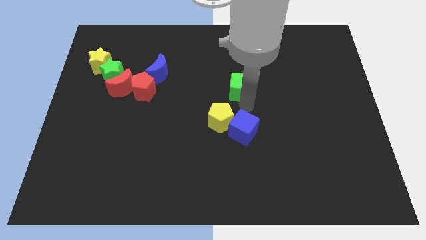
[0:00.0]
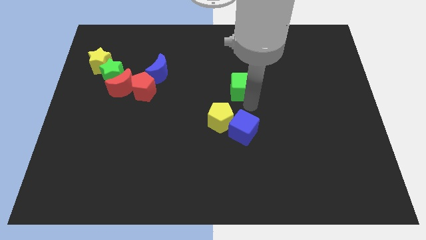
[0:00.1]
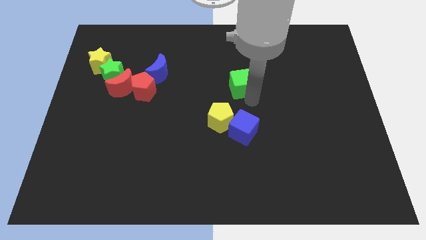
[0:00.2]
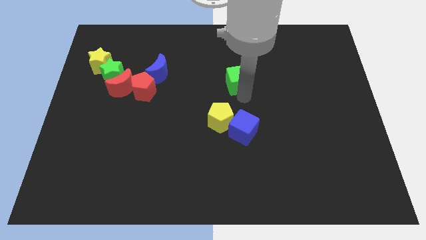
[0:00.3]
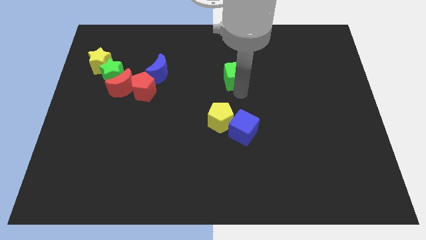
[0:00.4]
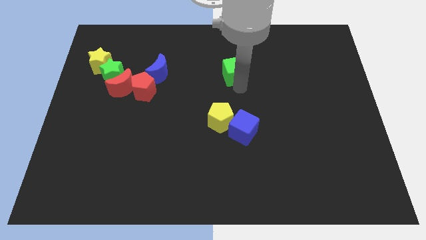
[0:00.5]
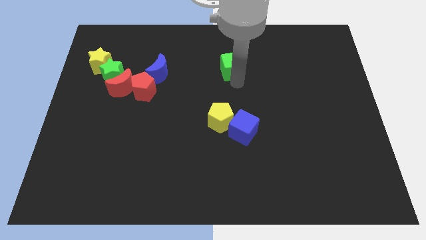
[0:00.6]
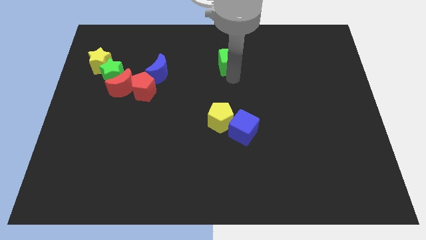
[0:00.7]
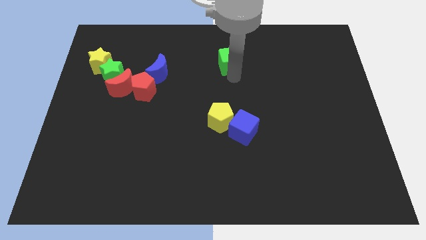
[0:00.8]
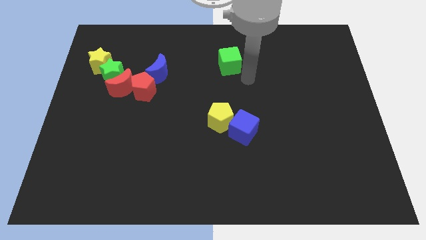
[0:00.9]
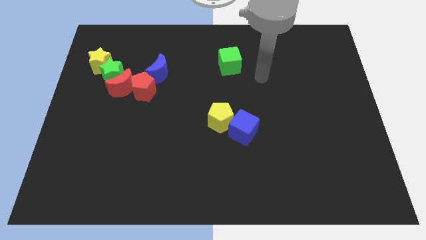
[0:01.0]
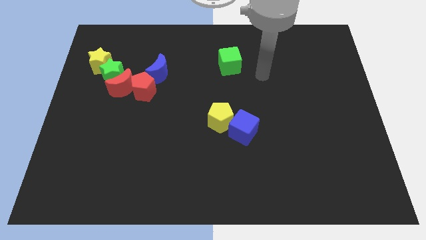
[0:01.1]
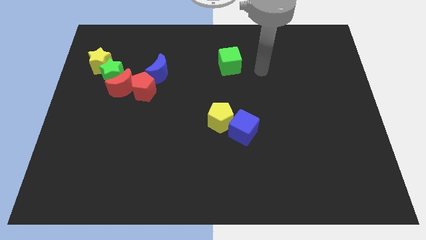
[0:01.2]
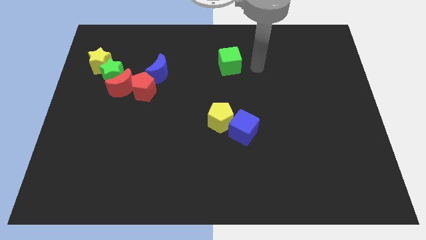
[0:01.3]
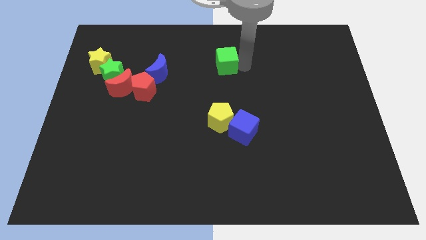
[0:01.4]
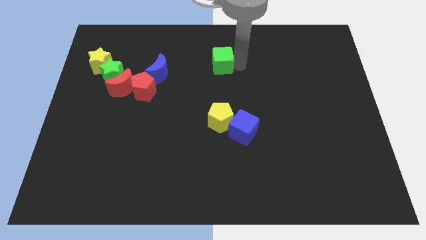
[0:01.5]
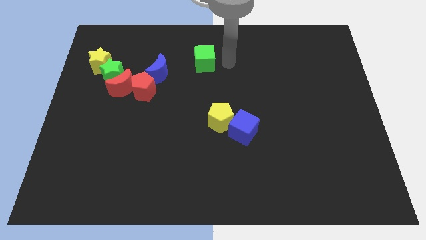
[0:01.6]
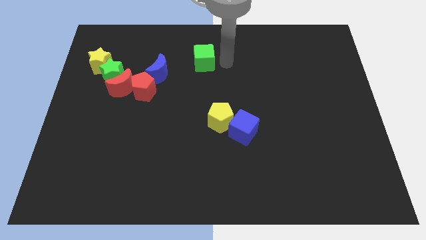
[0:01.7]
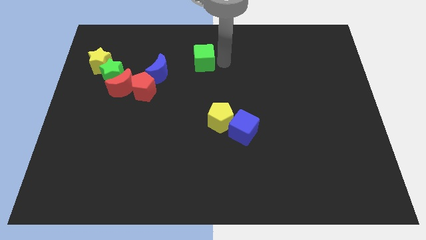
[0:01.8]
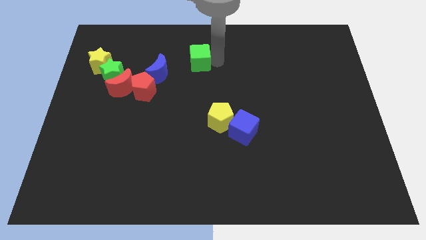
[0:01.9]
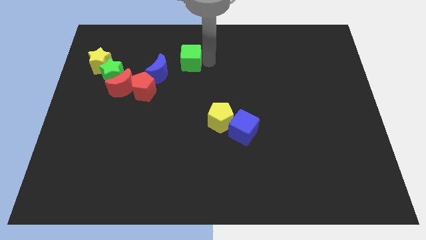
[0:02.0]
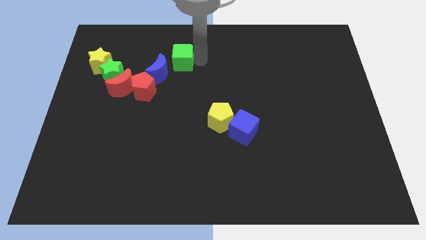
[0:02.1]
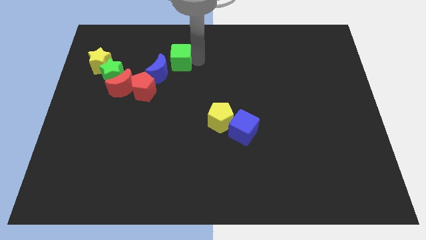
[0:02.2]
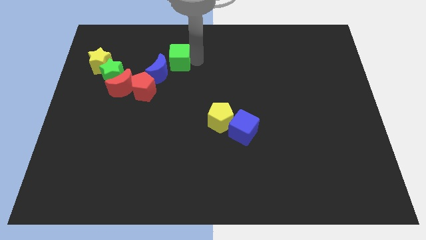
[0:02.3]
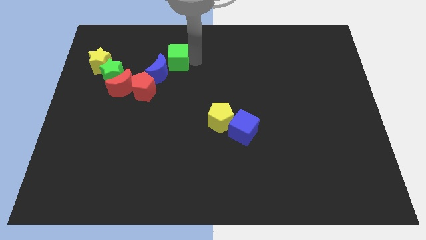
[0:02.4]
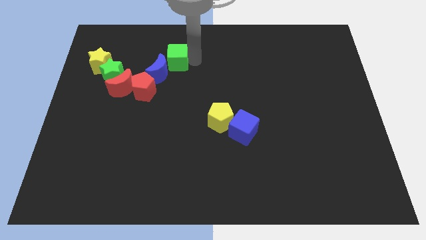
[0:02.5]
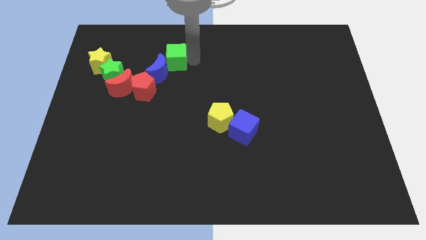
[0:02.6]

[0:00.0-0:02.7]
move green cube into group of blocks

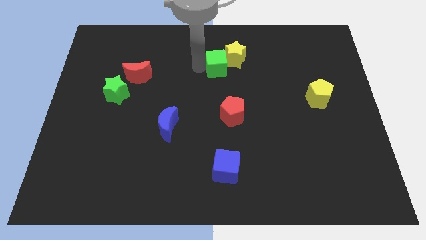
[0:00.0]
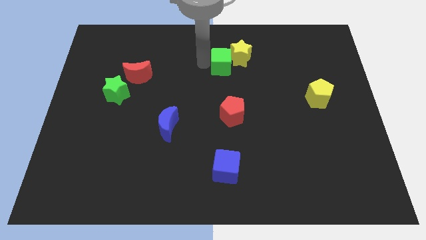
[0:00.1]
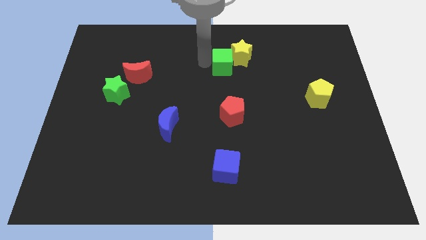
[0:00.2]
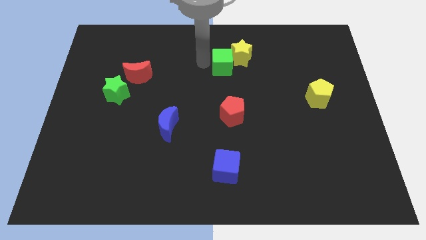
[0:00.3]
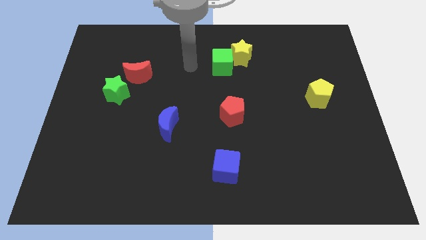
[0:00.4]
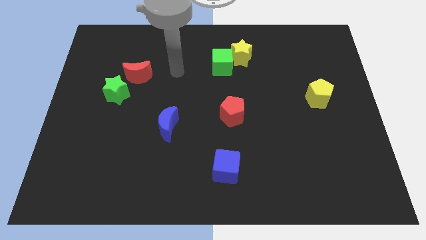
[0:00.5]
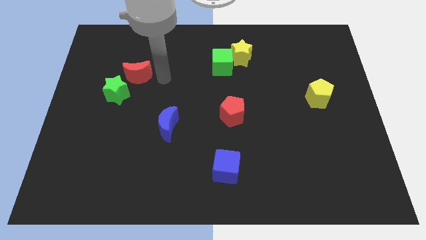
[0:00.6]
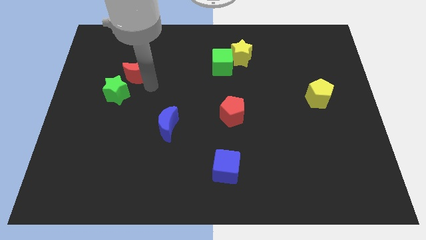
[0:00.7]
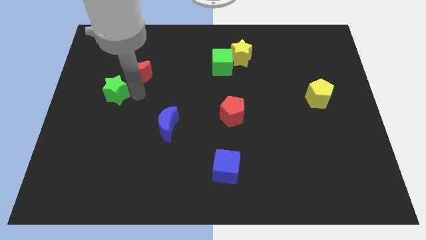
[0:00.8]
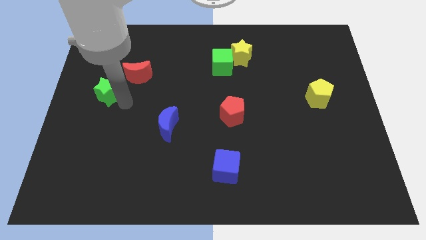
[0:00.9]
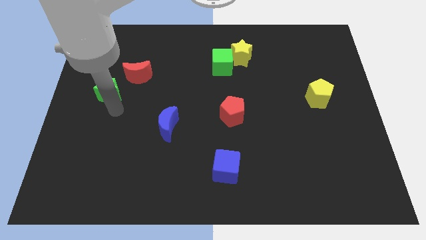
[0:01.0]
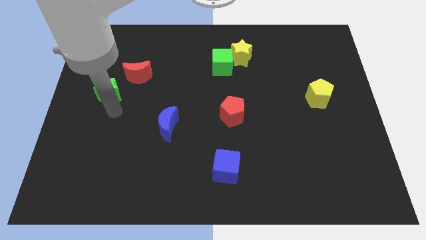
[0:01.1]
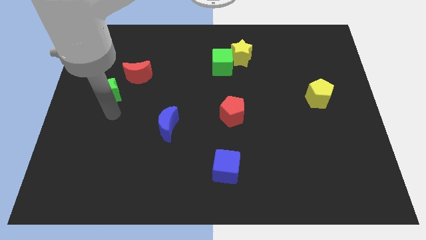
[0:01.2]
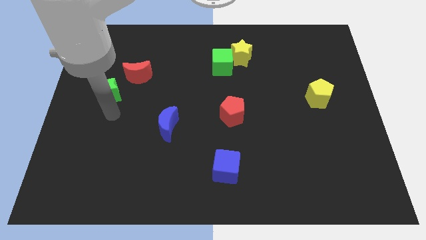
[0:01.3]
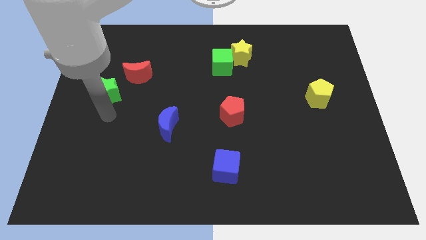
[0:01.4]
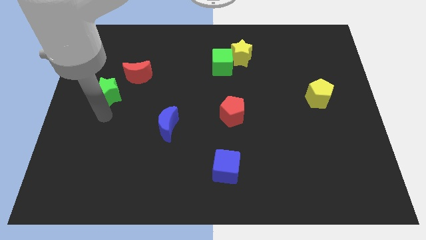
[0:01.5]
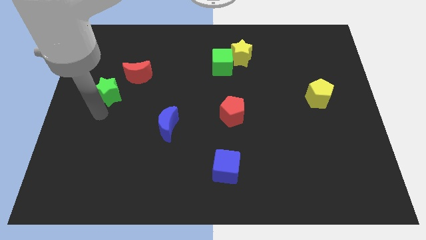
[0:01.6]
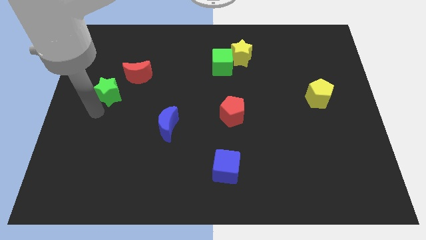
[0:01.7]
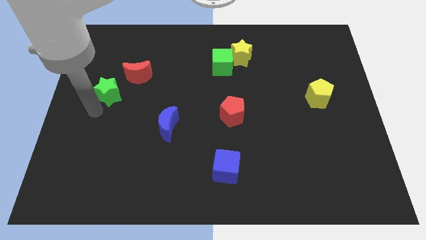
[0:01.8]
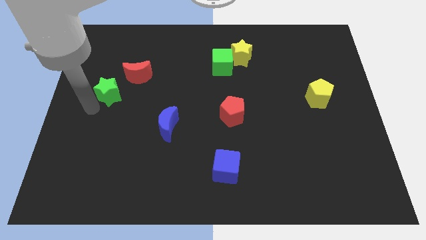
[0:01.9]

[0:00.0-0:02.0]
place the arm below the green star

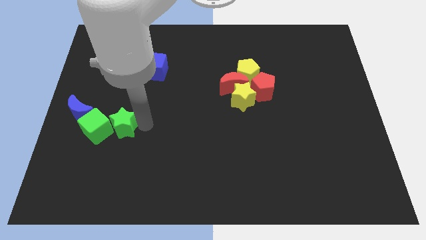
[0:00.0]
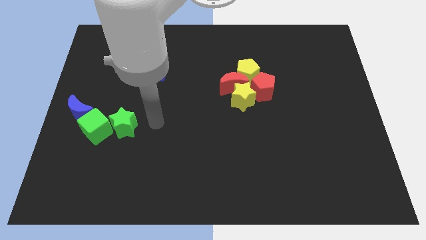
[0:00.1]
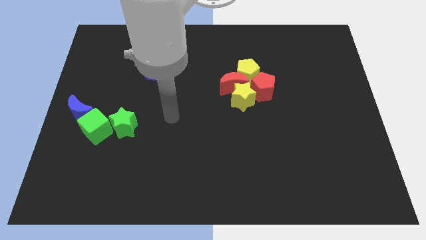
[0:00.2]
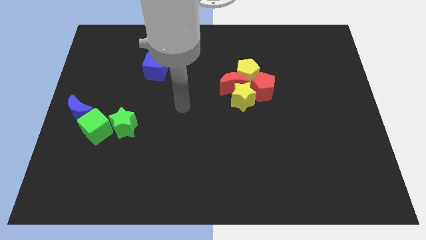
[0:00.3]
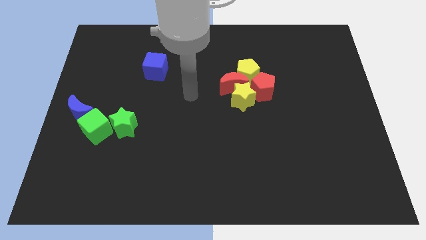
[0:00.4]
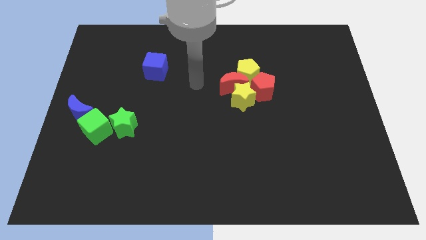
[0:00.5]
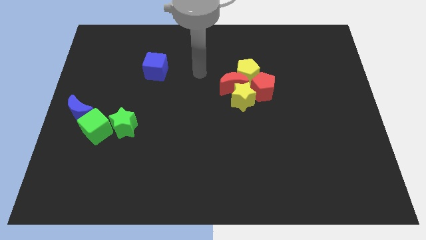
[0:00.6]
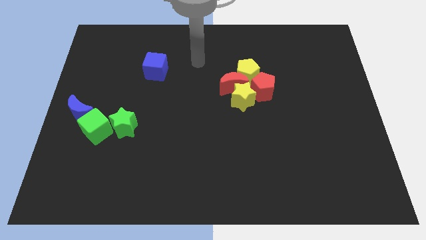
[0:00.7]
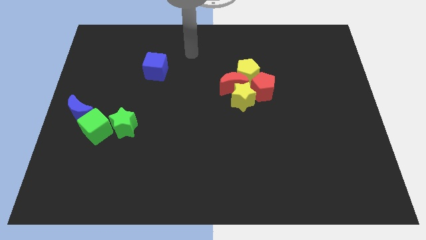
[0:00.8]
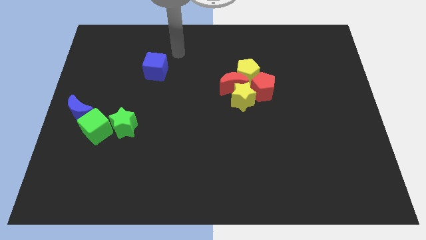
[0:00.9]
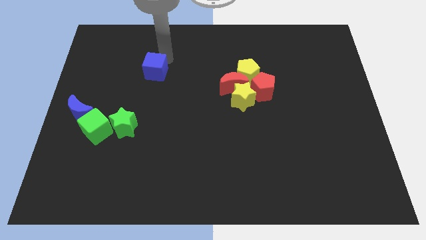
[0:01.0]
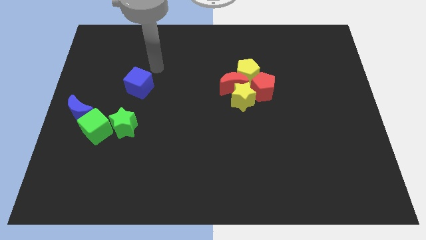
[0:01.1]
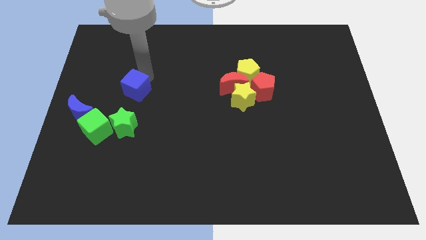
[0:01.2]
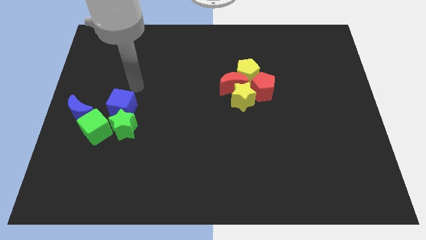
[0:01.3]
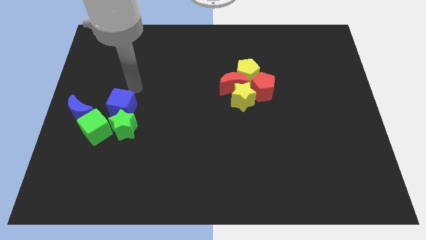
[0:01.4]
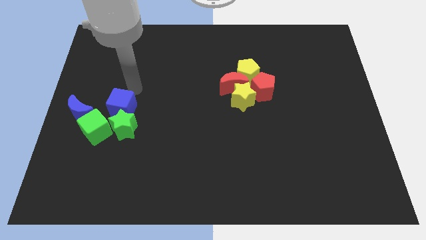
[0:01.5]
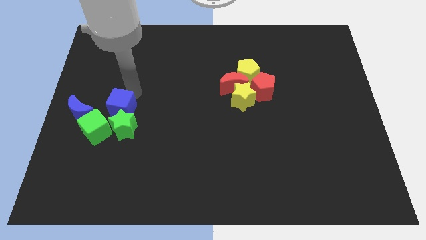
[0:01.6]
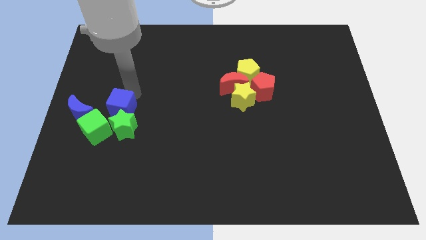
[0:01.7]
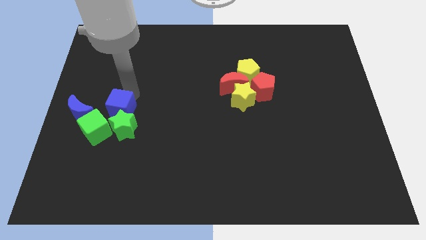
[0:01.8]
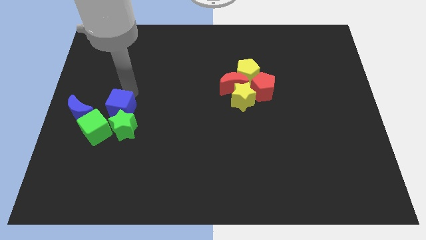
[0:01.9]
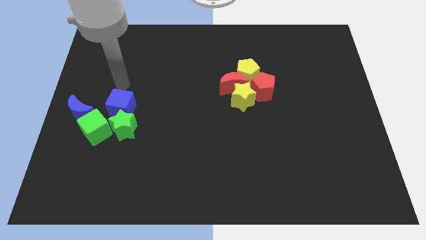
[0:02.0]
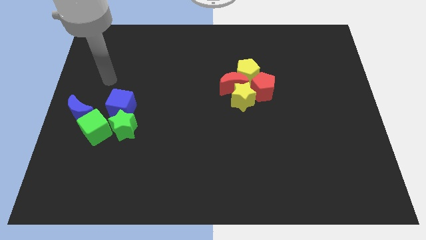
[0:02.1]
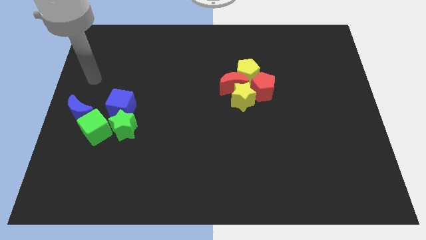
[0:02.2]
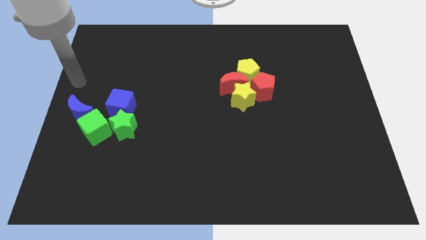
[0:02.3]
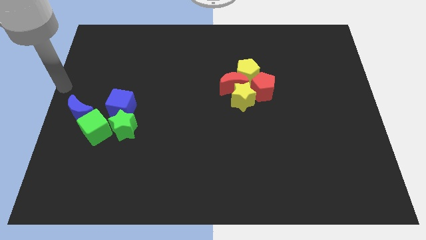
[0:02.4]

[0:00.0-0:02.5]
push the blue cube to the top of the green star

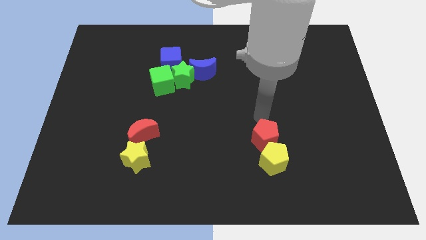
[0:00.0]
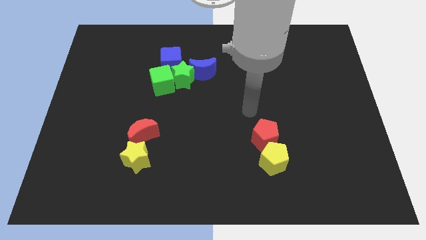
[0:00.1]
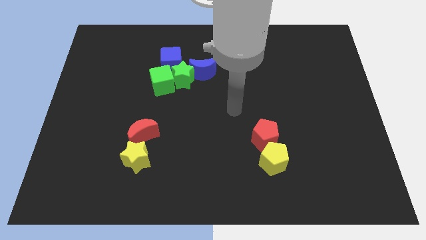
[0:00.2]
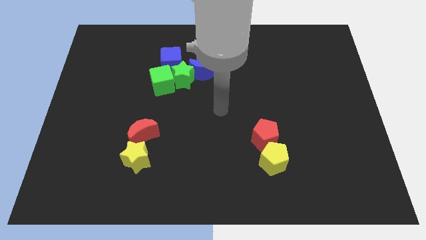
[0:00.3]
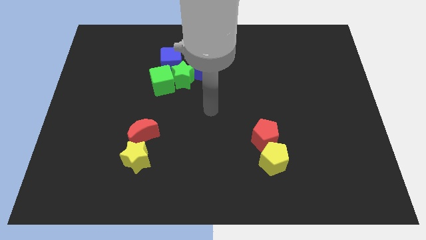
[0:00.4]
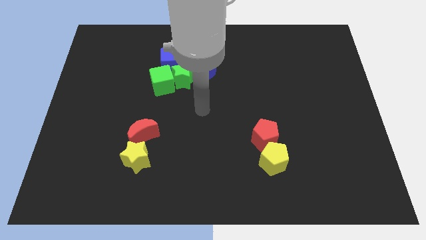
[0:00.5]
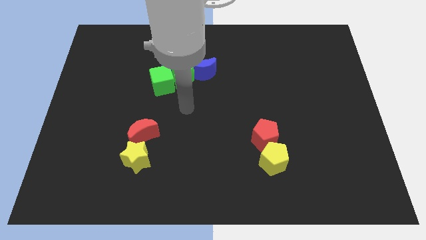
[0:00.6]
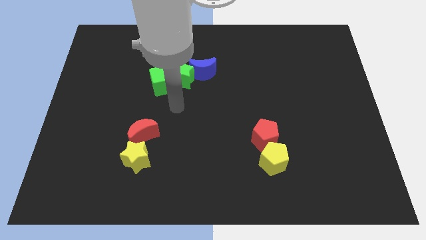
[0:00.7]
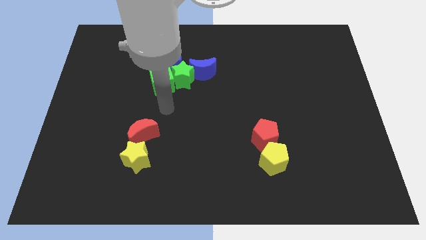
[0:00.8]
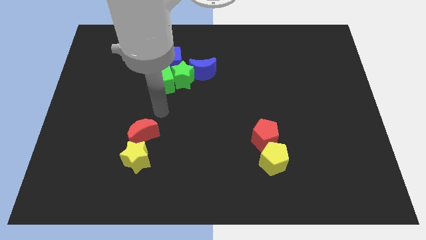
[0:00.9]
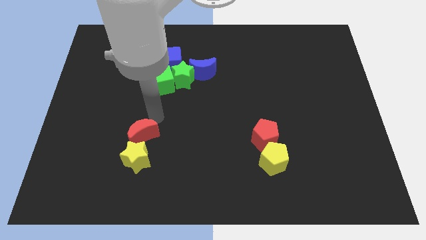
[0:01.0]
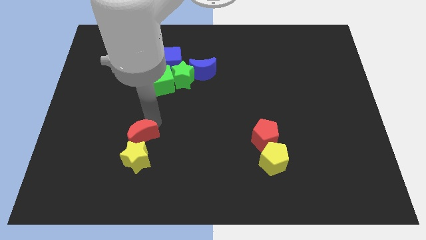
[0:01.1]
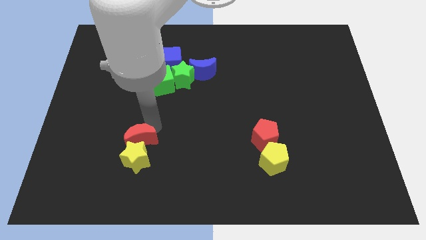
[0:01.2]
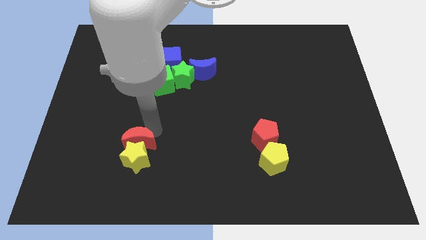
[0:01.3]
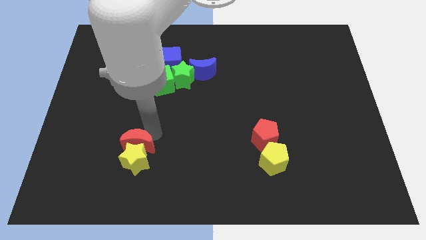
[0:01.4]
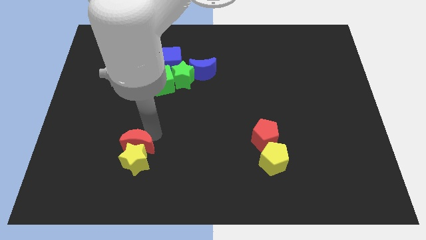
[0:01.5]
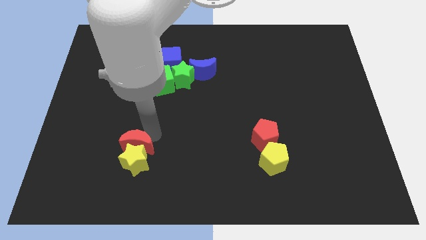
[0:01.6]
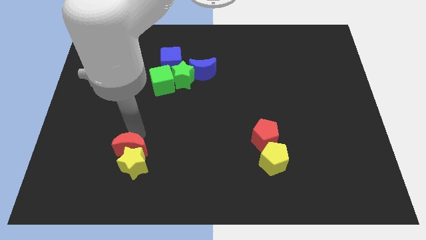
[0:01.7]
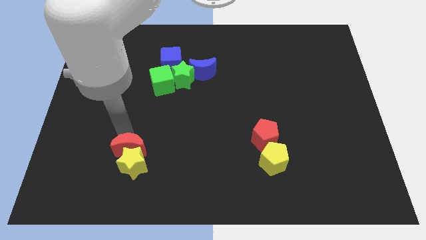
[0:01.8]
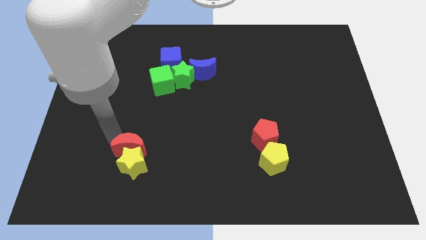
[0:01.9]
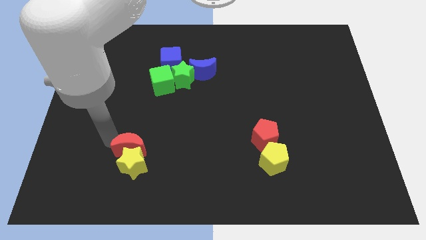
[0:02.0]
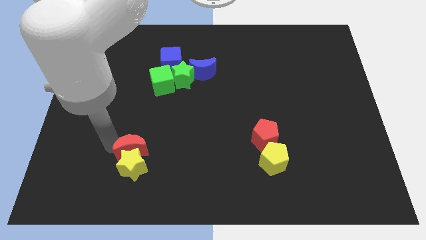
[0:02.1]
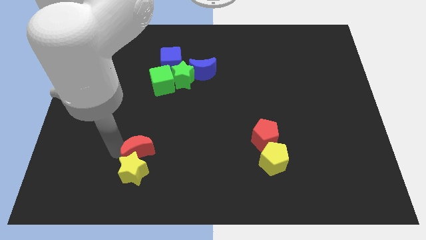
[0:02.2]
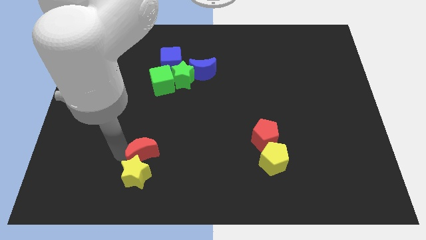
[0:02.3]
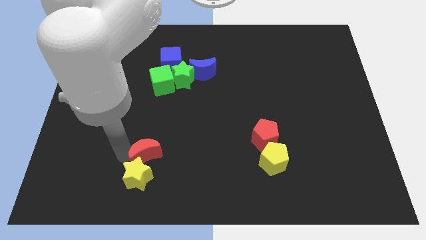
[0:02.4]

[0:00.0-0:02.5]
push the red crescent into the yellow star
